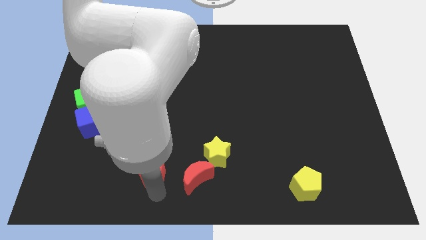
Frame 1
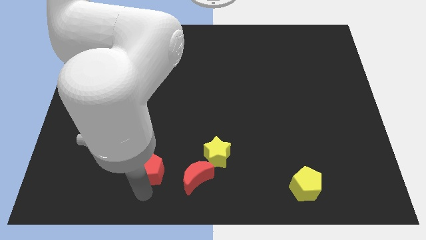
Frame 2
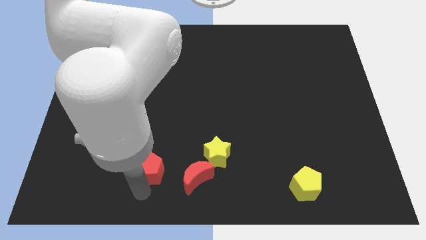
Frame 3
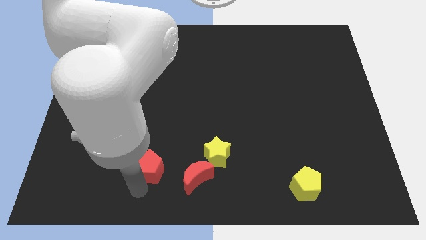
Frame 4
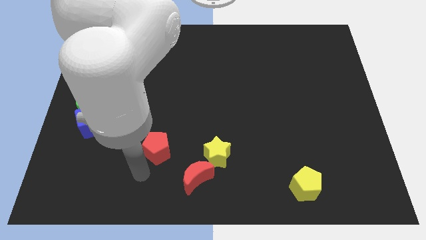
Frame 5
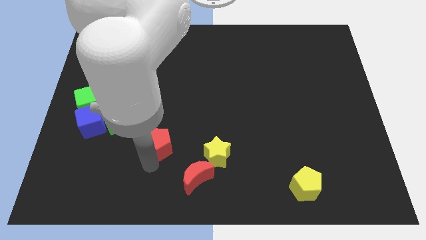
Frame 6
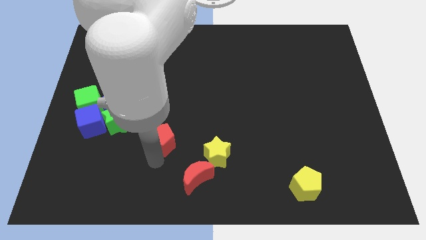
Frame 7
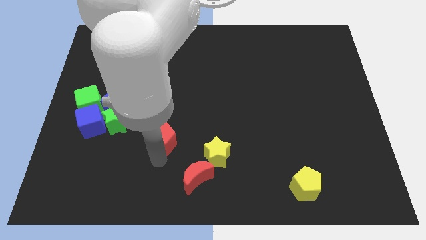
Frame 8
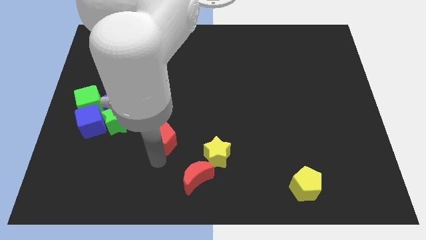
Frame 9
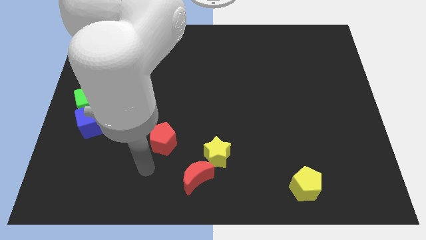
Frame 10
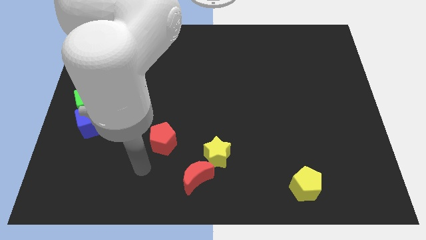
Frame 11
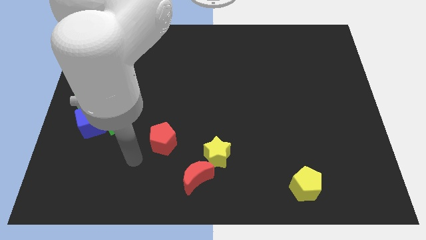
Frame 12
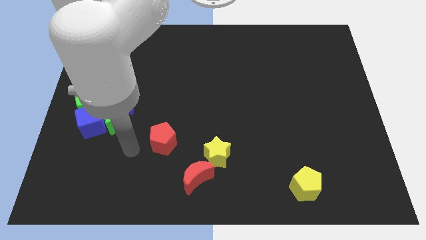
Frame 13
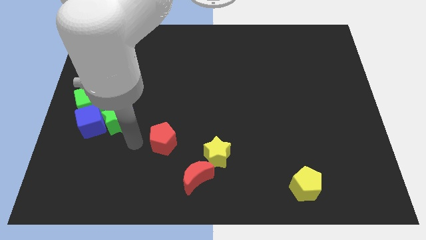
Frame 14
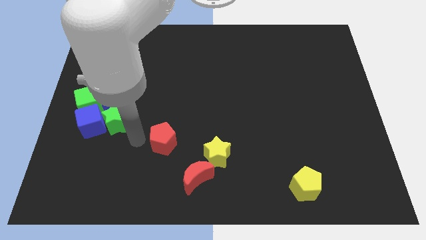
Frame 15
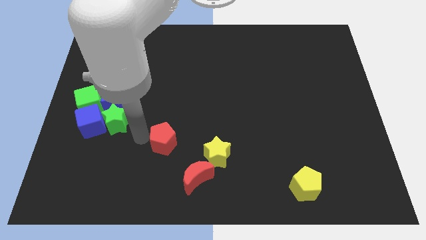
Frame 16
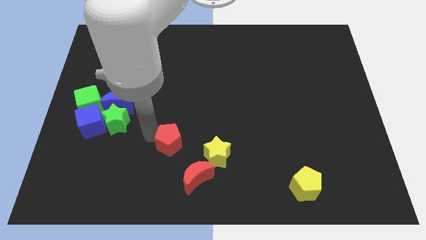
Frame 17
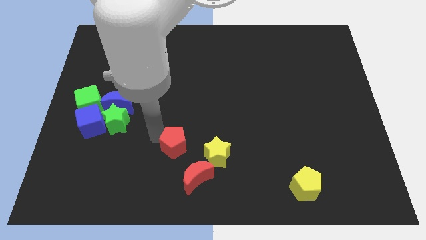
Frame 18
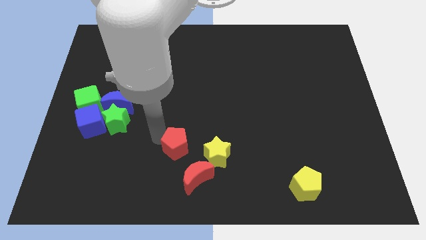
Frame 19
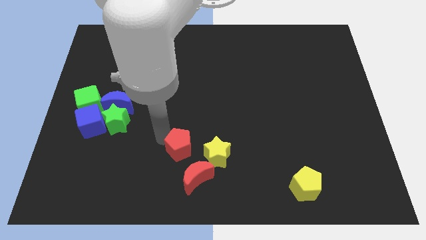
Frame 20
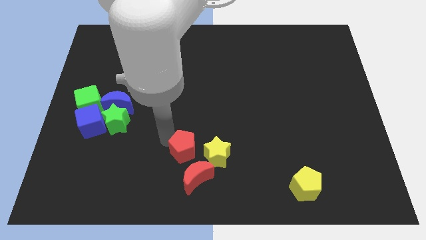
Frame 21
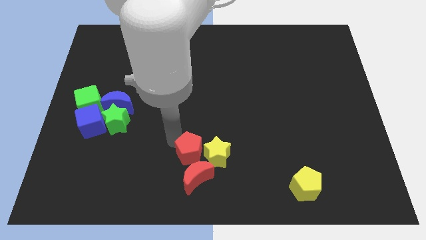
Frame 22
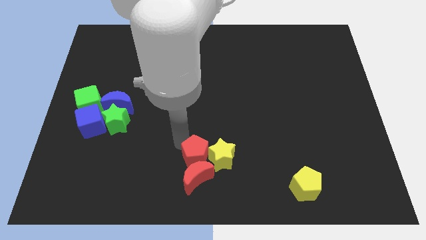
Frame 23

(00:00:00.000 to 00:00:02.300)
place the red pentagon on top of the red crescent

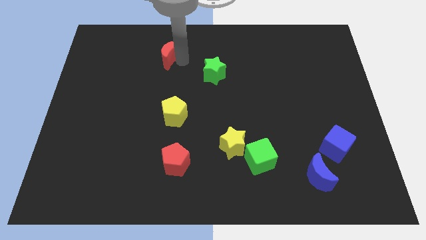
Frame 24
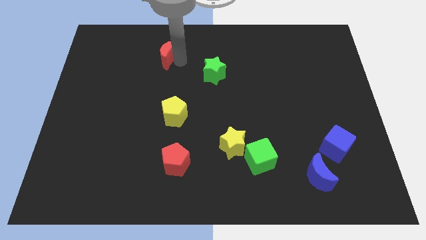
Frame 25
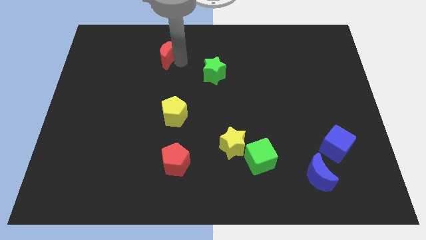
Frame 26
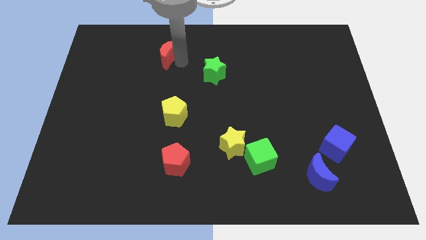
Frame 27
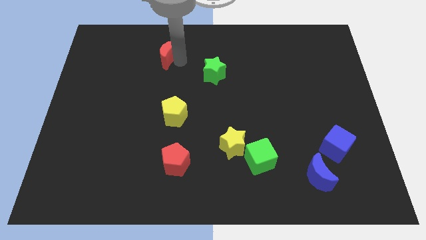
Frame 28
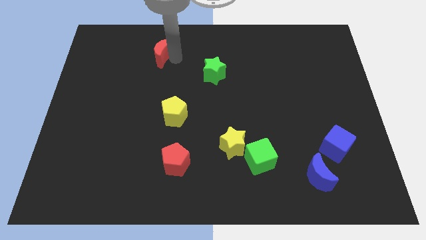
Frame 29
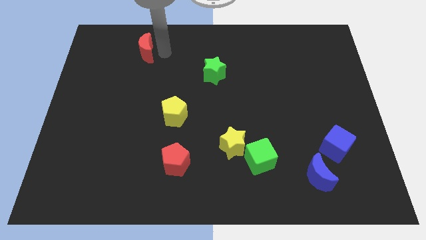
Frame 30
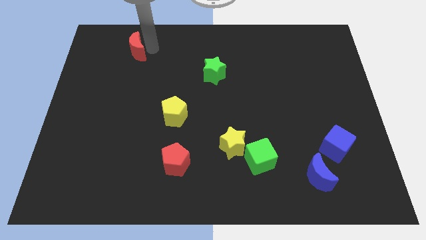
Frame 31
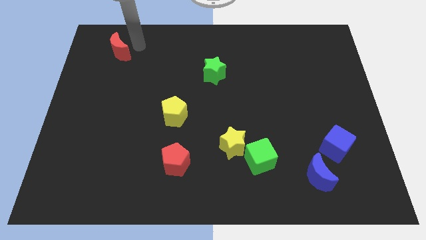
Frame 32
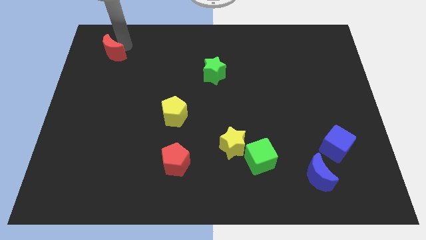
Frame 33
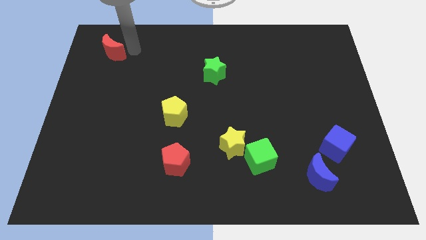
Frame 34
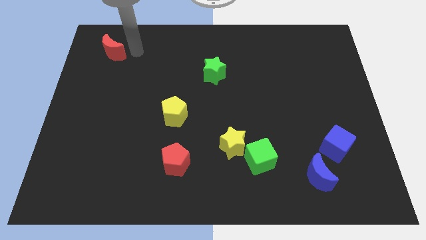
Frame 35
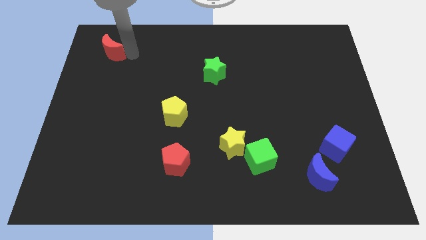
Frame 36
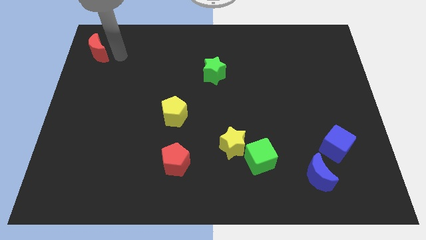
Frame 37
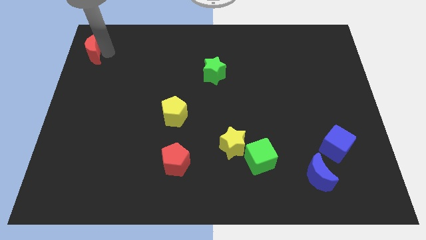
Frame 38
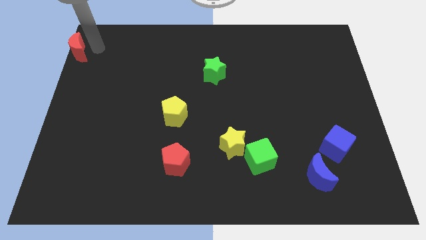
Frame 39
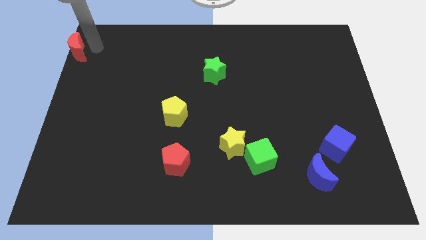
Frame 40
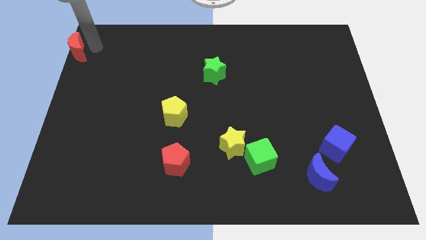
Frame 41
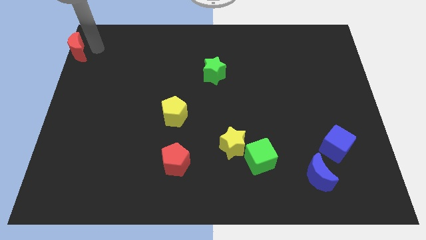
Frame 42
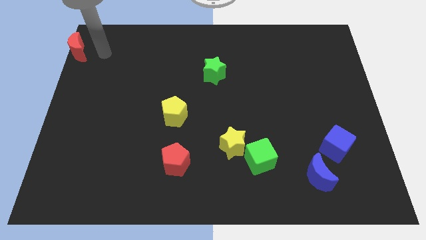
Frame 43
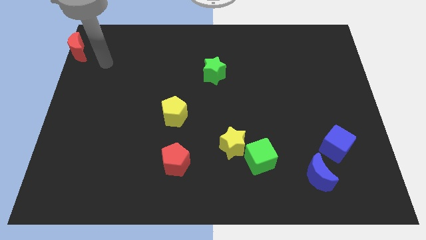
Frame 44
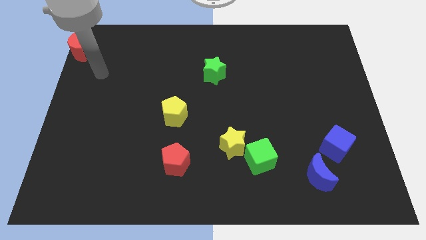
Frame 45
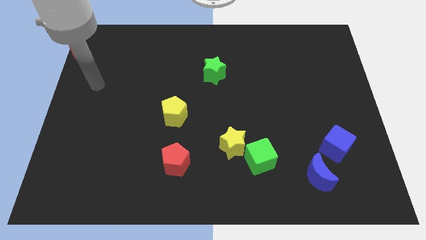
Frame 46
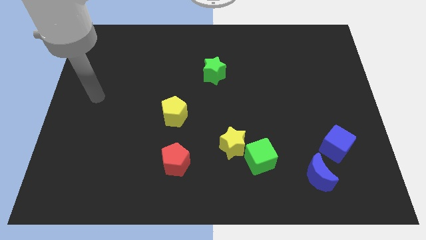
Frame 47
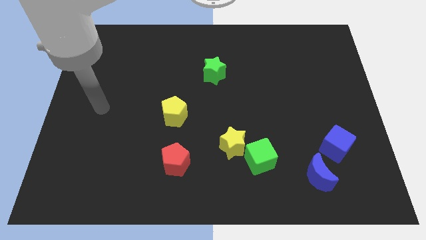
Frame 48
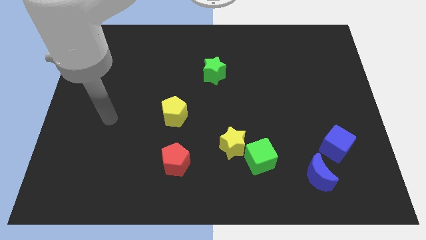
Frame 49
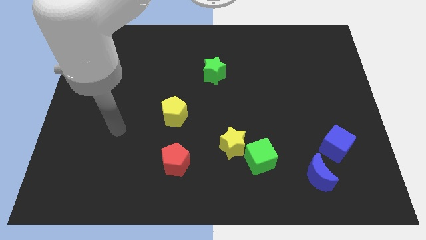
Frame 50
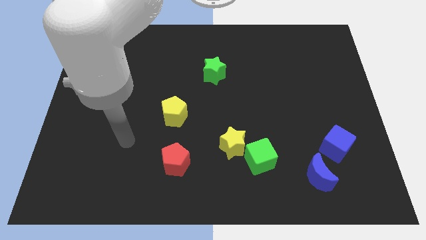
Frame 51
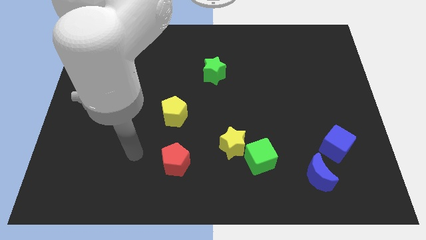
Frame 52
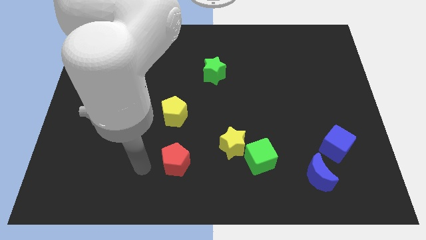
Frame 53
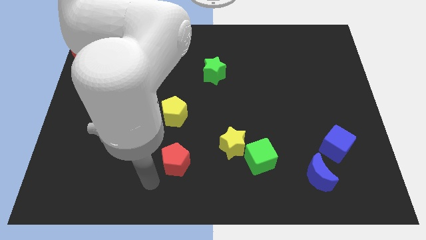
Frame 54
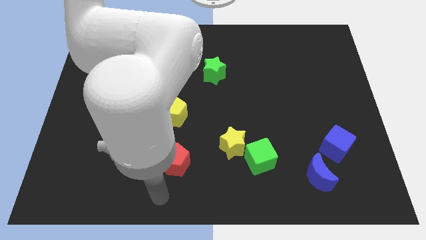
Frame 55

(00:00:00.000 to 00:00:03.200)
move the red moon to the top left side of the board

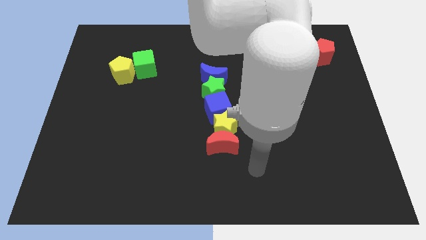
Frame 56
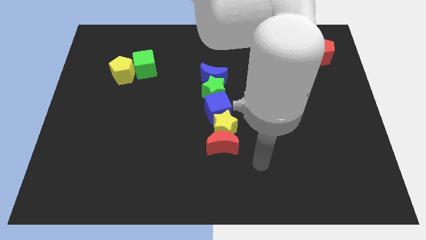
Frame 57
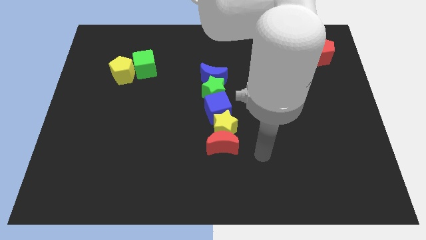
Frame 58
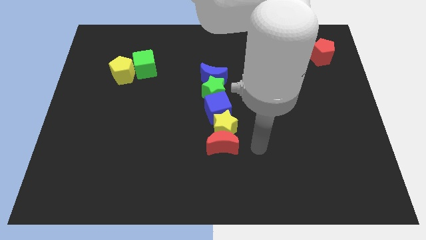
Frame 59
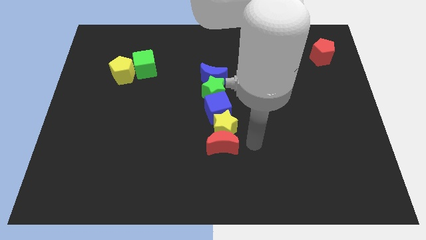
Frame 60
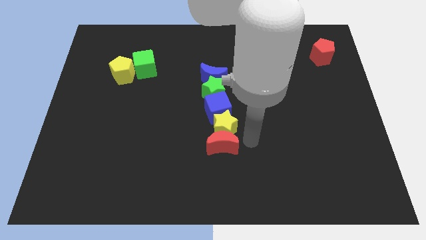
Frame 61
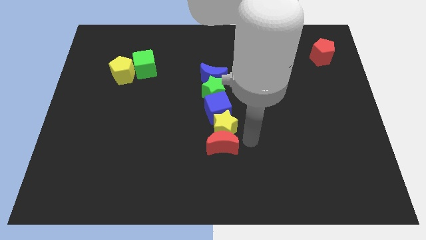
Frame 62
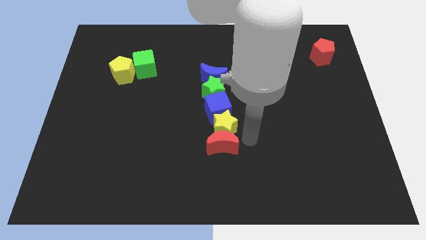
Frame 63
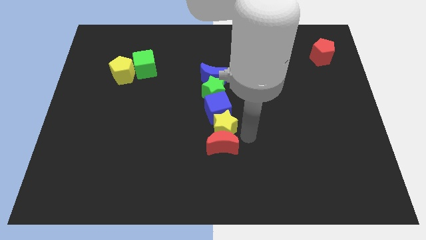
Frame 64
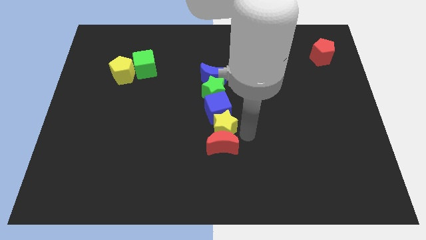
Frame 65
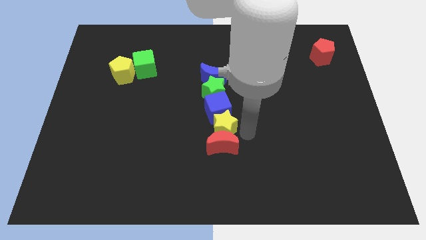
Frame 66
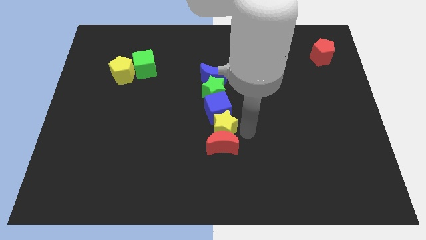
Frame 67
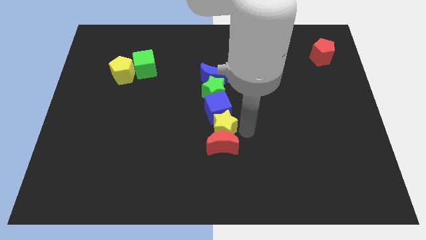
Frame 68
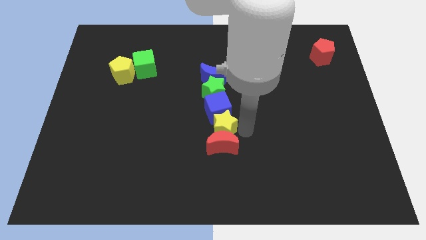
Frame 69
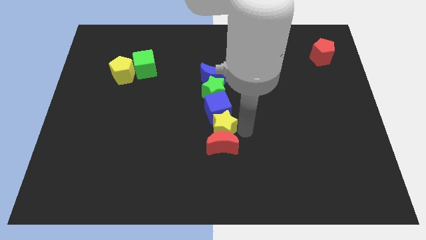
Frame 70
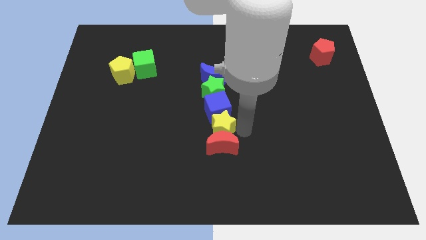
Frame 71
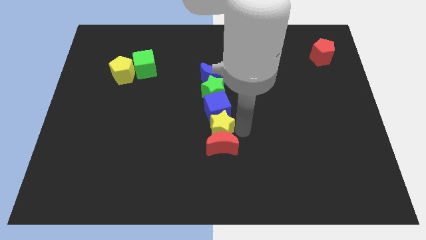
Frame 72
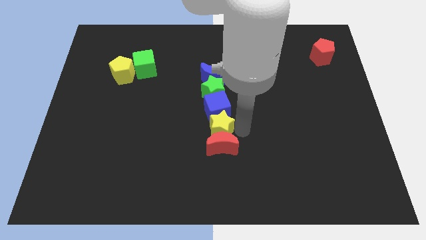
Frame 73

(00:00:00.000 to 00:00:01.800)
adjust the yellow star in between the red crescent and blue cube

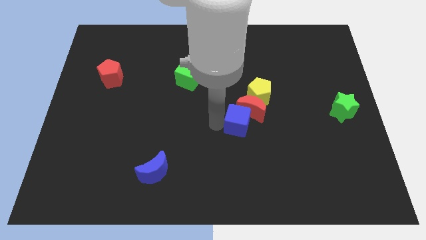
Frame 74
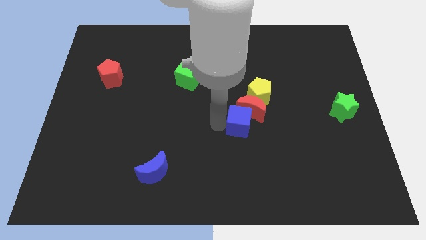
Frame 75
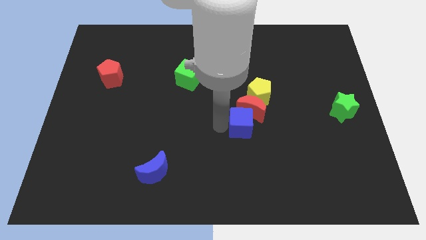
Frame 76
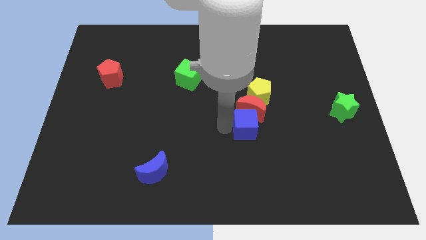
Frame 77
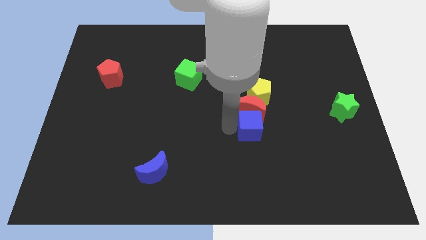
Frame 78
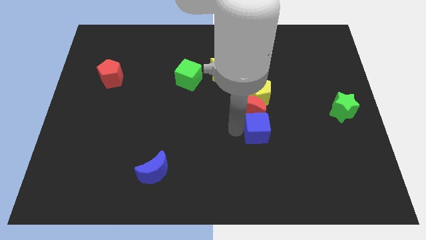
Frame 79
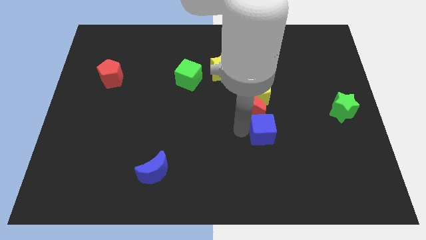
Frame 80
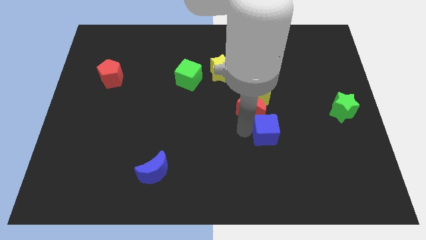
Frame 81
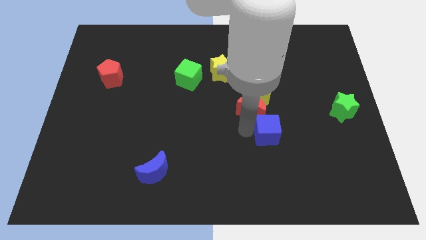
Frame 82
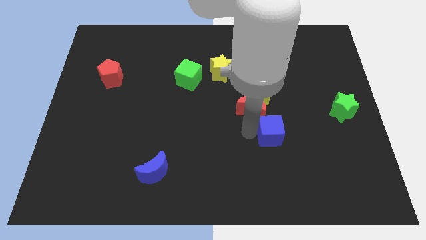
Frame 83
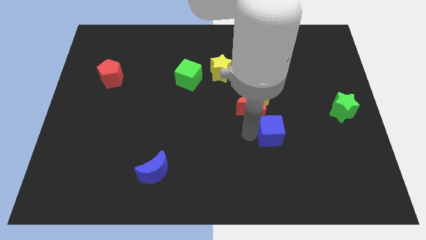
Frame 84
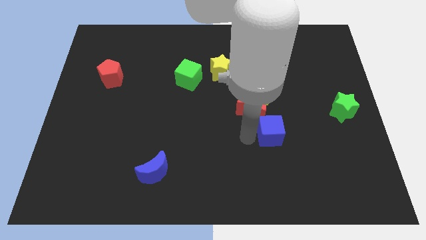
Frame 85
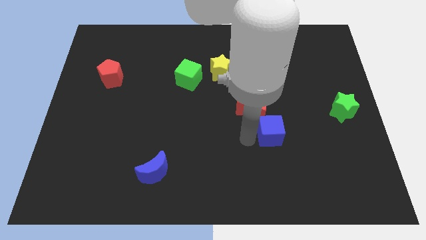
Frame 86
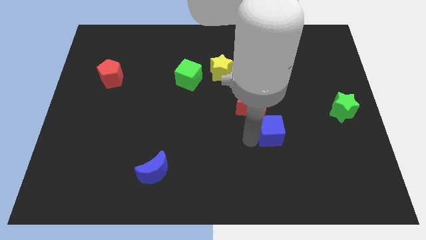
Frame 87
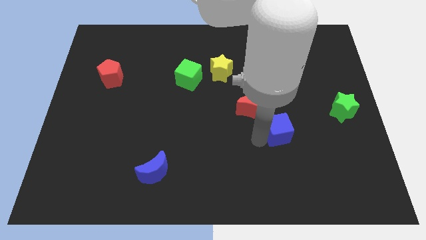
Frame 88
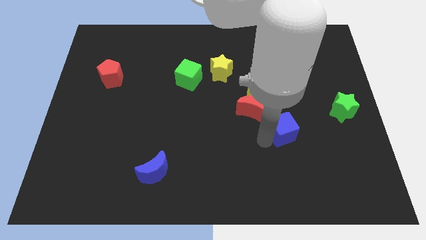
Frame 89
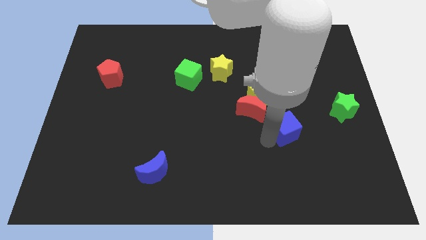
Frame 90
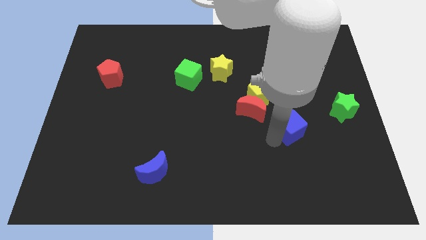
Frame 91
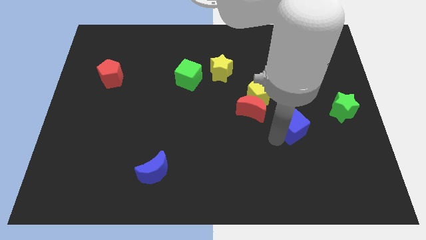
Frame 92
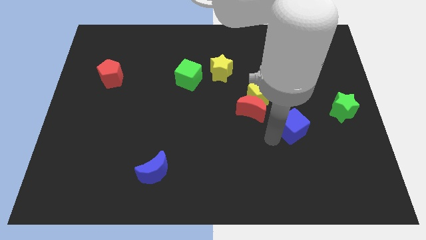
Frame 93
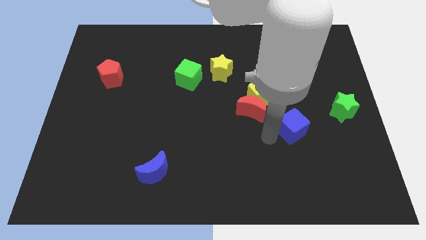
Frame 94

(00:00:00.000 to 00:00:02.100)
move the blue cube away from the red moon
